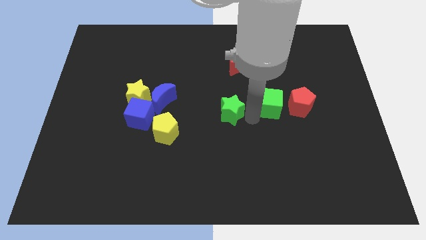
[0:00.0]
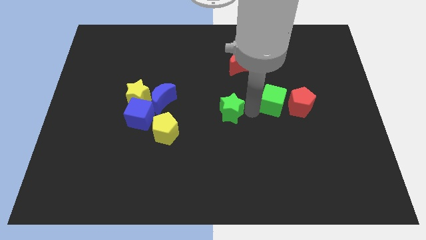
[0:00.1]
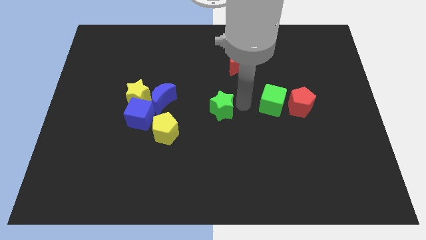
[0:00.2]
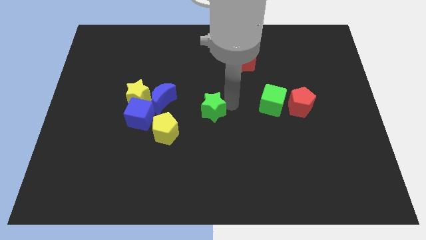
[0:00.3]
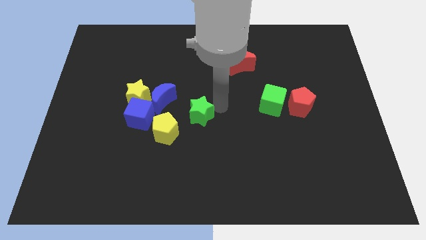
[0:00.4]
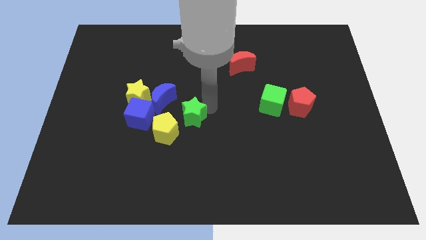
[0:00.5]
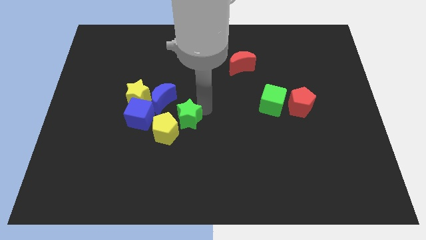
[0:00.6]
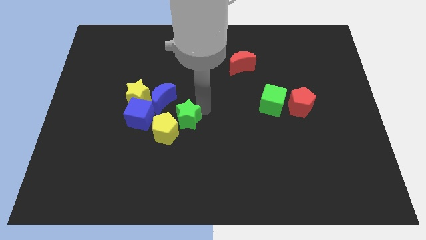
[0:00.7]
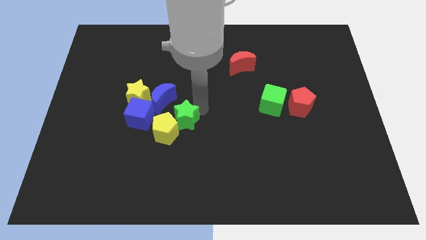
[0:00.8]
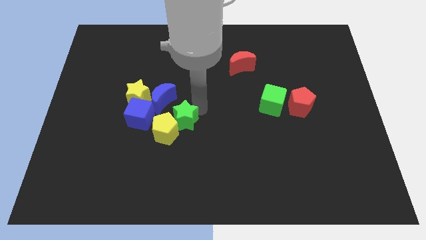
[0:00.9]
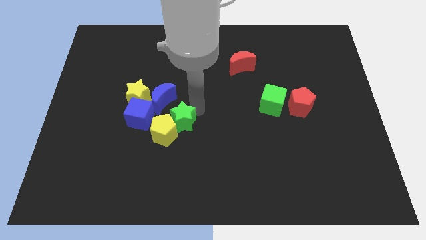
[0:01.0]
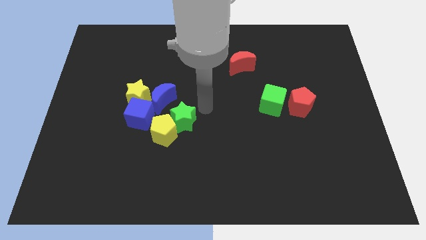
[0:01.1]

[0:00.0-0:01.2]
place green star to the top of yellow pentagon

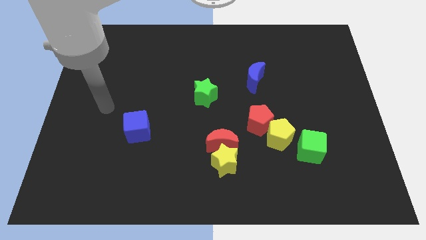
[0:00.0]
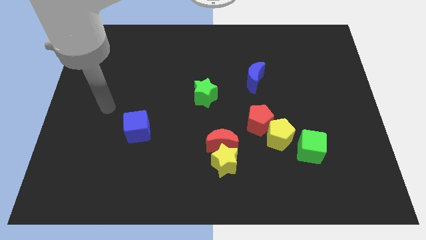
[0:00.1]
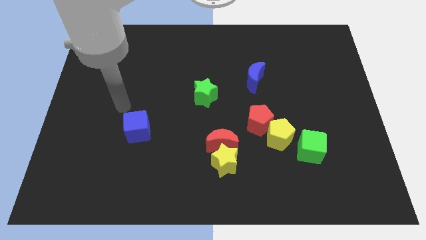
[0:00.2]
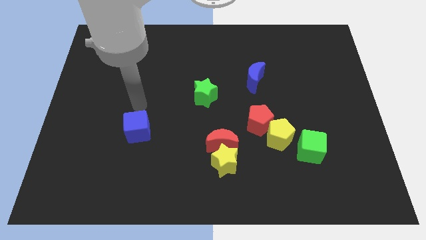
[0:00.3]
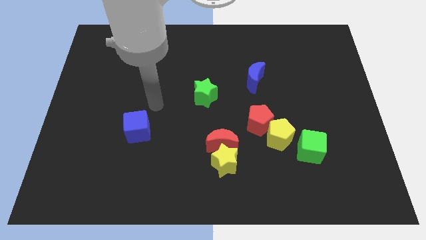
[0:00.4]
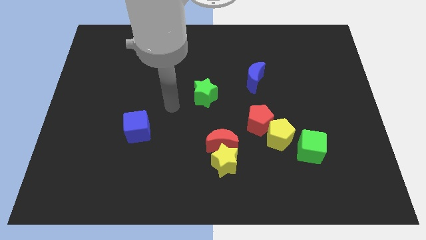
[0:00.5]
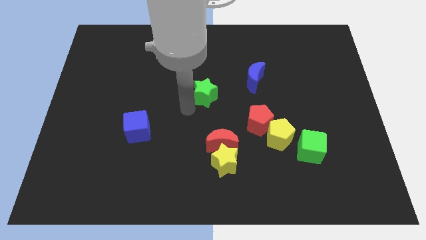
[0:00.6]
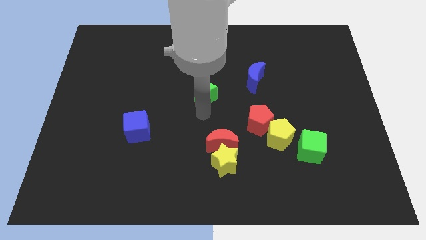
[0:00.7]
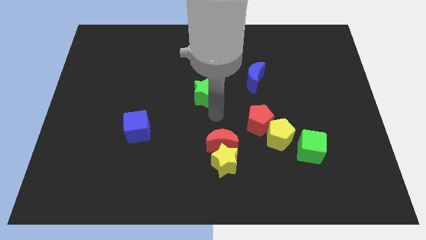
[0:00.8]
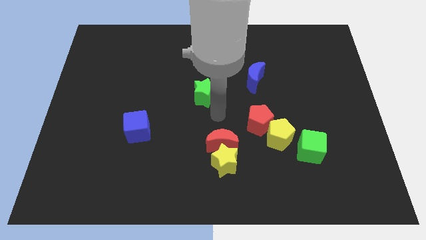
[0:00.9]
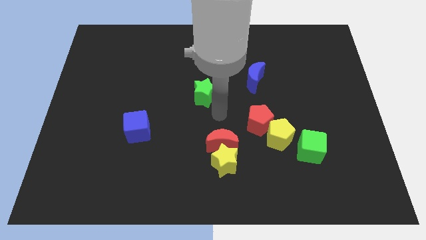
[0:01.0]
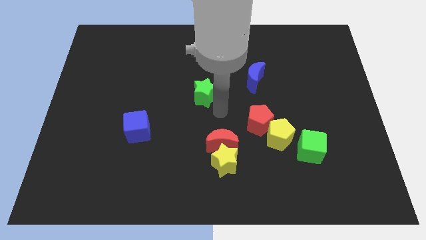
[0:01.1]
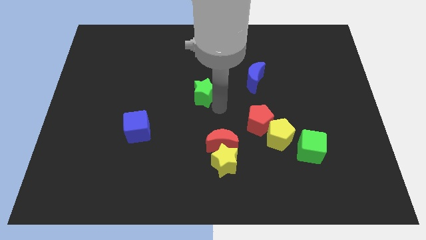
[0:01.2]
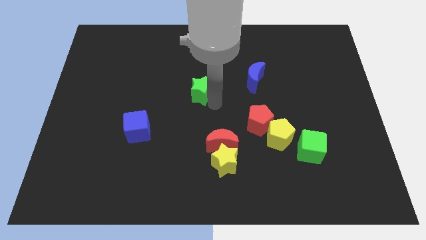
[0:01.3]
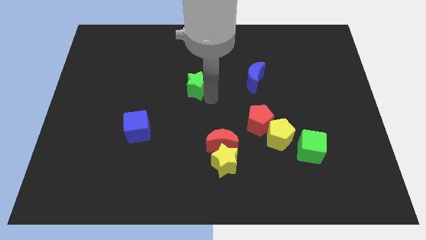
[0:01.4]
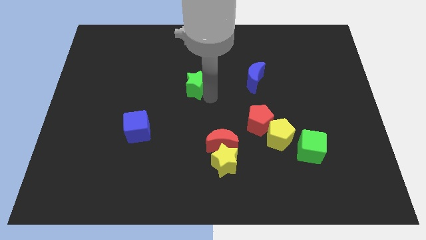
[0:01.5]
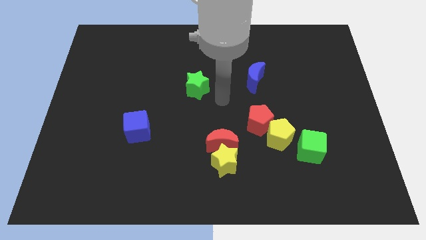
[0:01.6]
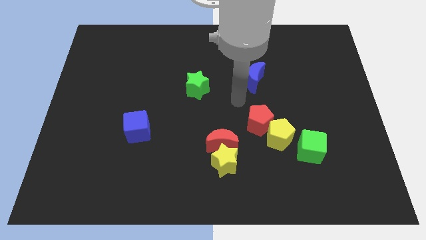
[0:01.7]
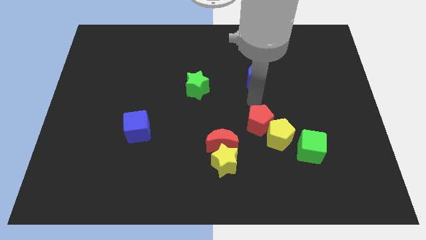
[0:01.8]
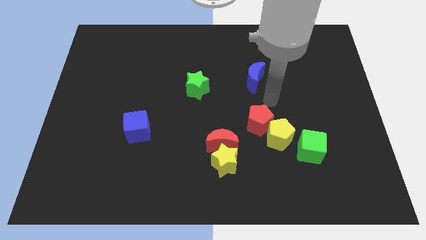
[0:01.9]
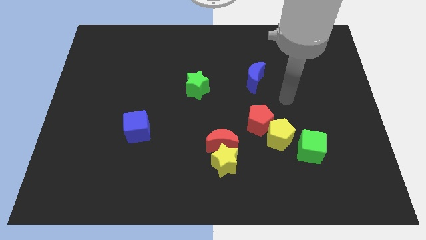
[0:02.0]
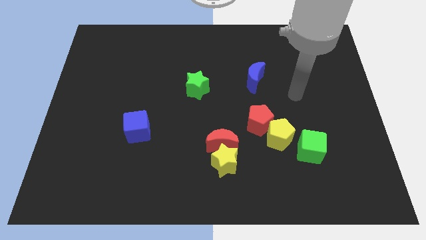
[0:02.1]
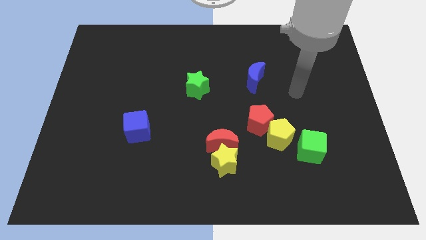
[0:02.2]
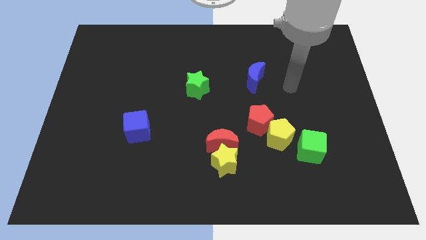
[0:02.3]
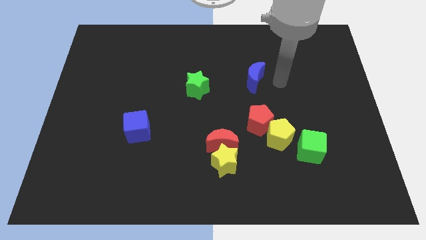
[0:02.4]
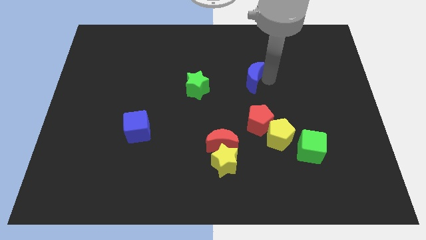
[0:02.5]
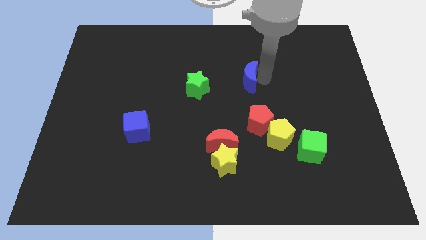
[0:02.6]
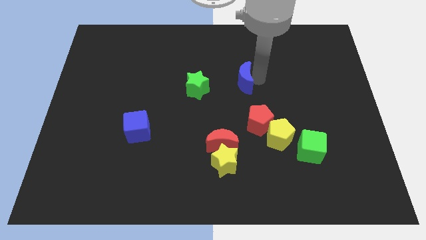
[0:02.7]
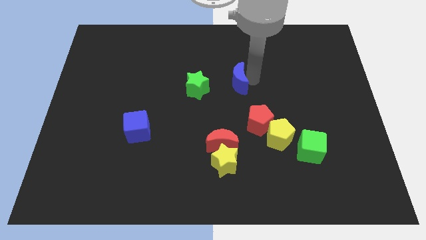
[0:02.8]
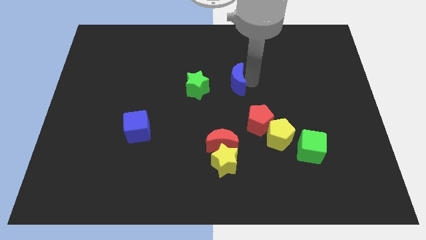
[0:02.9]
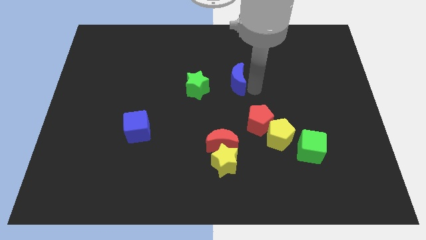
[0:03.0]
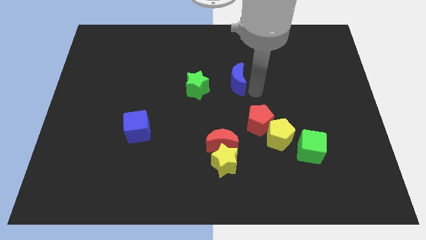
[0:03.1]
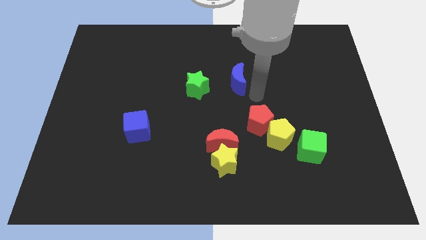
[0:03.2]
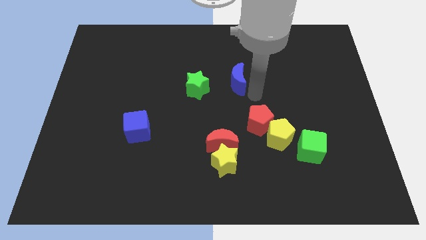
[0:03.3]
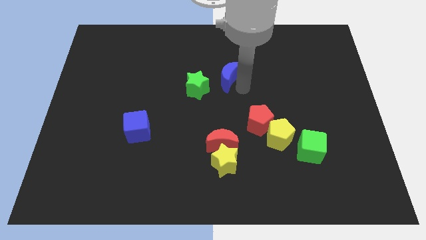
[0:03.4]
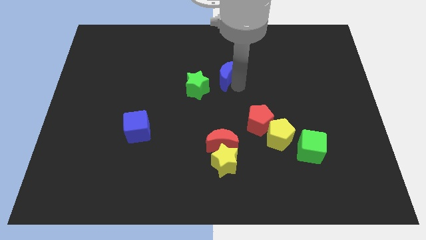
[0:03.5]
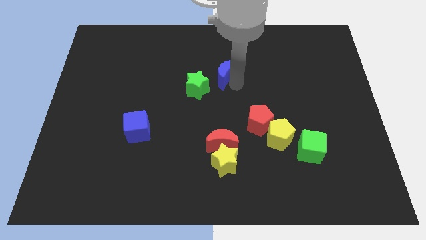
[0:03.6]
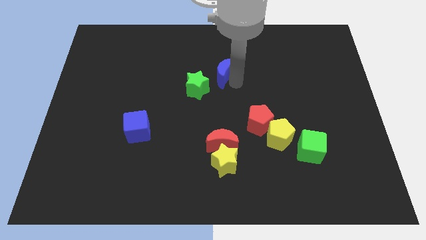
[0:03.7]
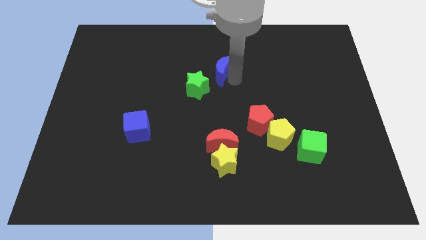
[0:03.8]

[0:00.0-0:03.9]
push the green star and blue moon diagonally at the top right side of the blue cube

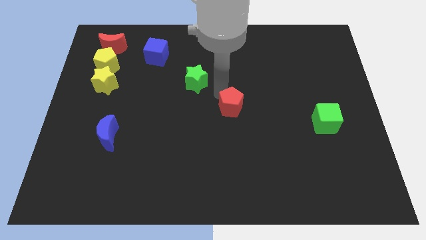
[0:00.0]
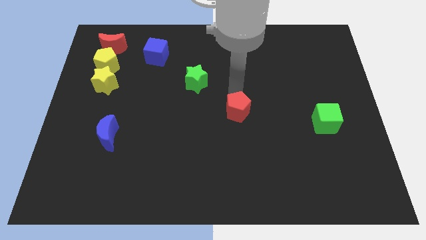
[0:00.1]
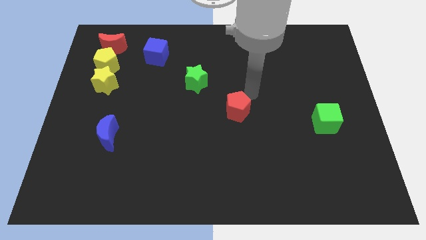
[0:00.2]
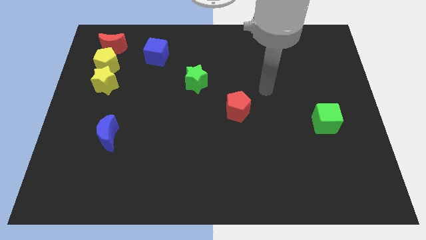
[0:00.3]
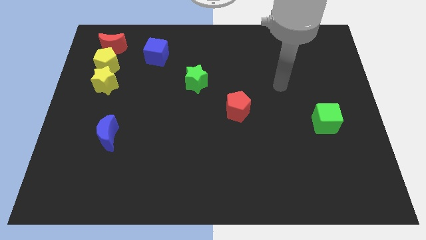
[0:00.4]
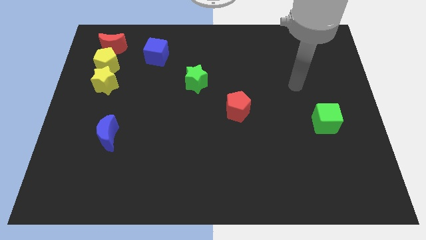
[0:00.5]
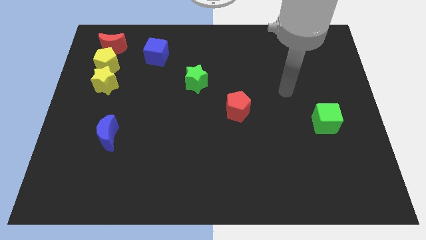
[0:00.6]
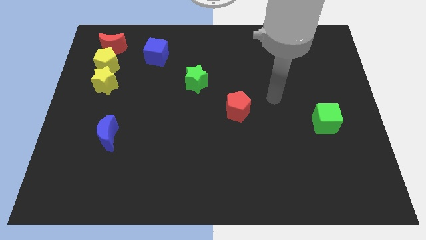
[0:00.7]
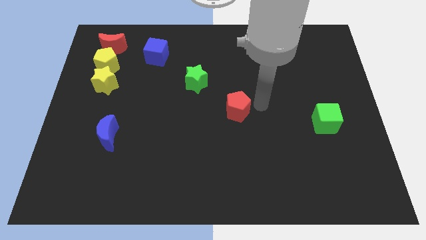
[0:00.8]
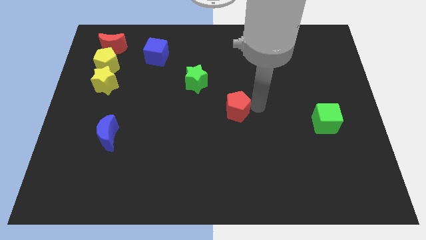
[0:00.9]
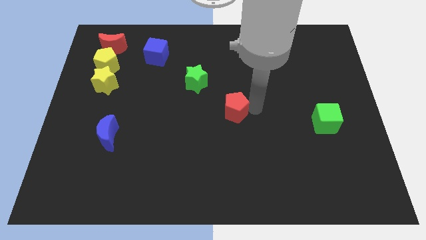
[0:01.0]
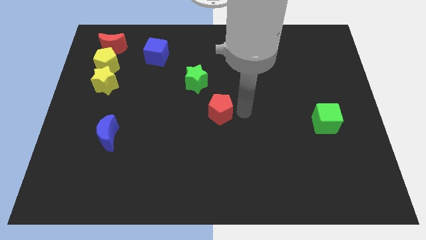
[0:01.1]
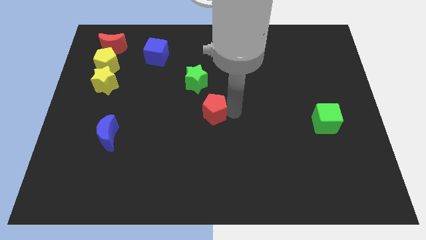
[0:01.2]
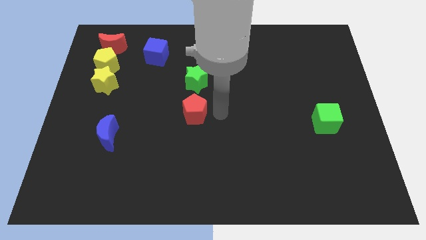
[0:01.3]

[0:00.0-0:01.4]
push the red pentagon to the center

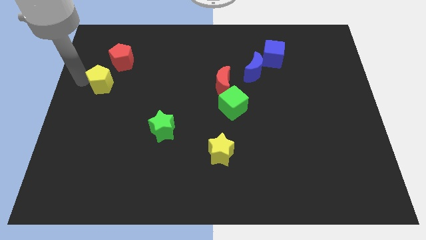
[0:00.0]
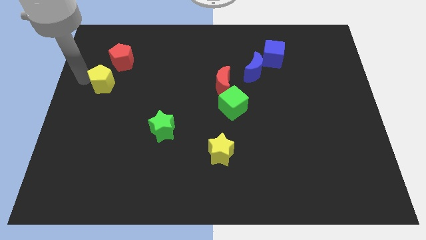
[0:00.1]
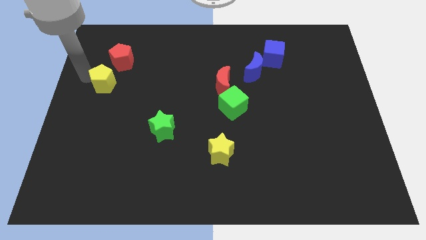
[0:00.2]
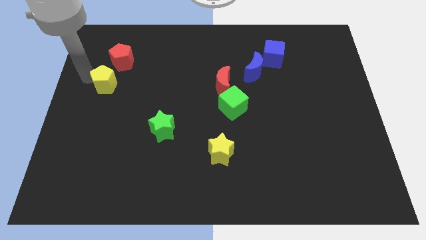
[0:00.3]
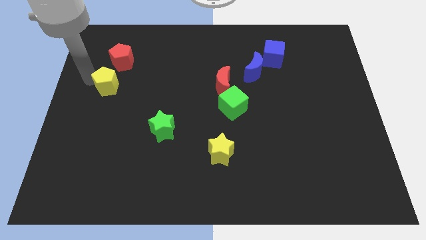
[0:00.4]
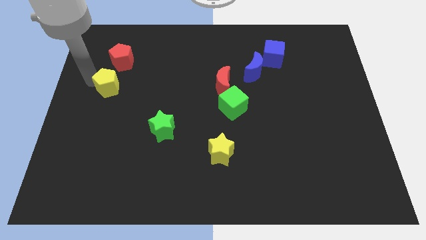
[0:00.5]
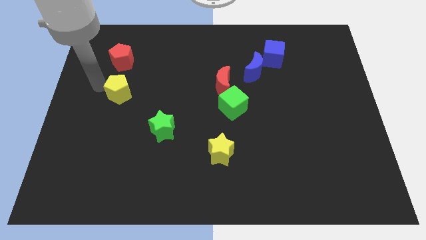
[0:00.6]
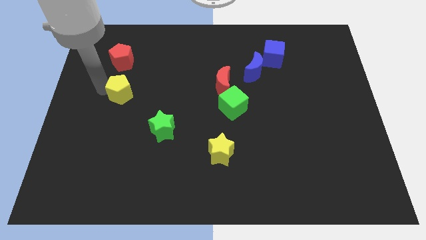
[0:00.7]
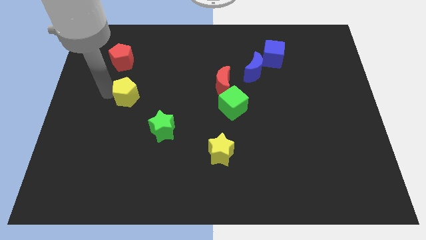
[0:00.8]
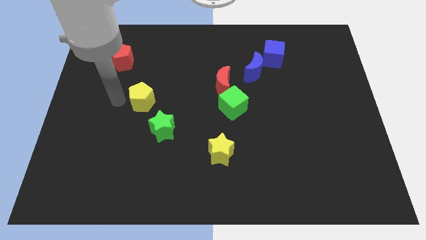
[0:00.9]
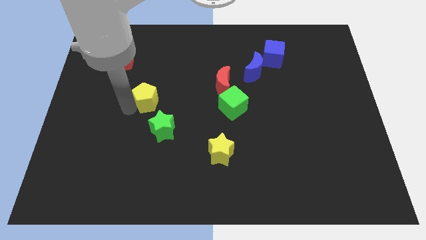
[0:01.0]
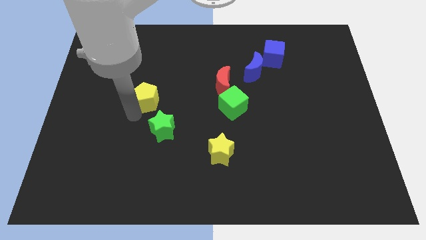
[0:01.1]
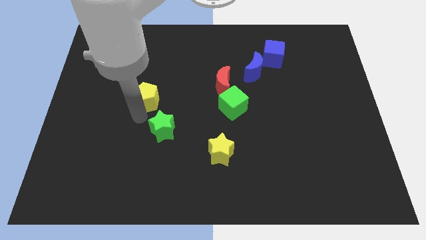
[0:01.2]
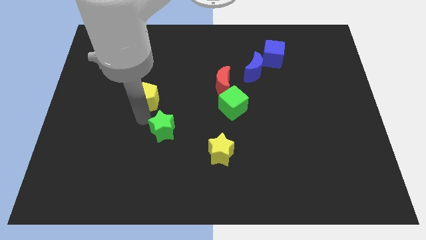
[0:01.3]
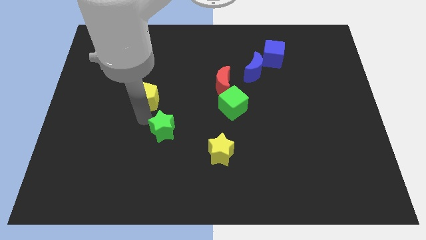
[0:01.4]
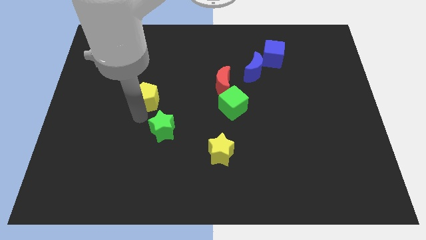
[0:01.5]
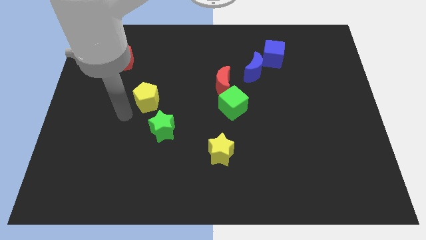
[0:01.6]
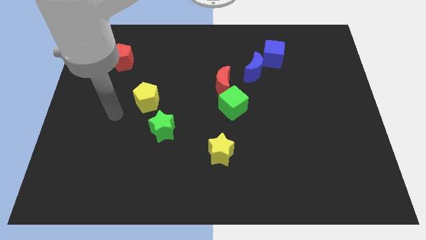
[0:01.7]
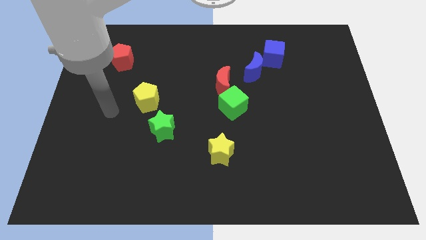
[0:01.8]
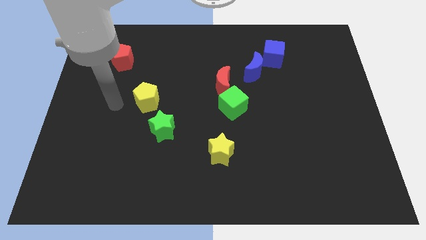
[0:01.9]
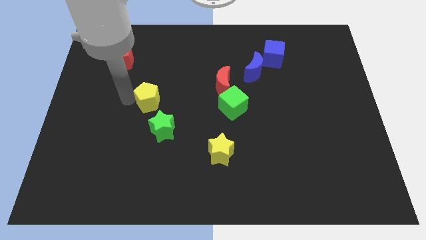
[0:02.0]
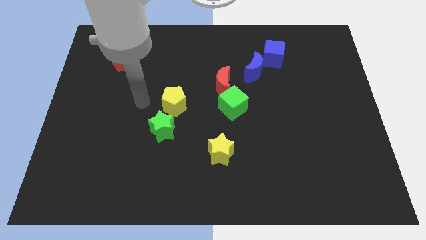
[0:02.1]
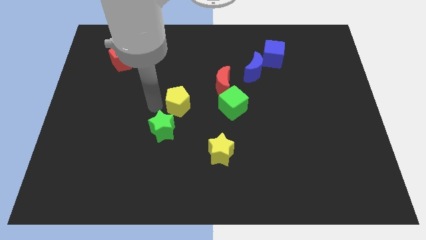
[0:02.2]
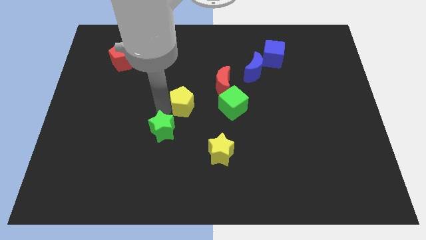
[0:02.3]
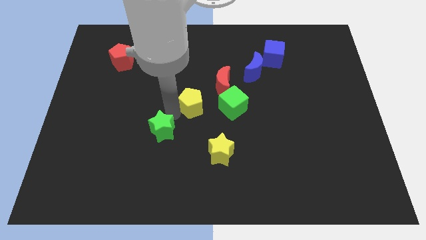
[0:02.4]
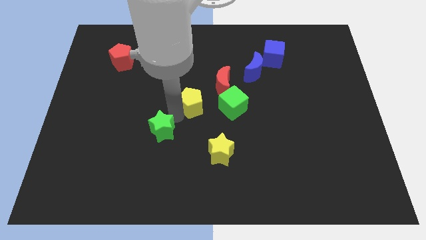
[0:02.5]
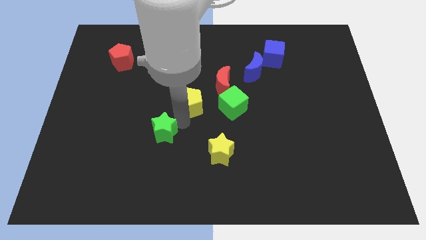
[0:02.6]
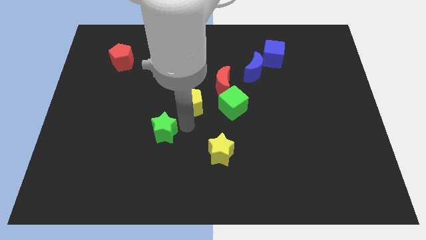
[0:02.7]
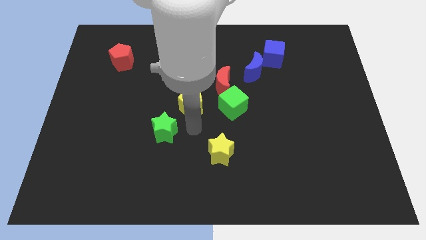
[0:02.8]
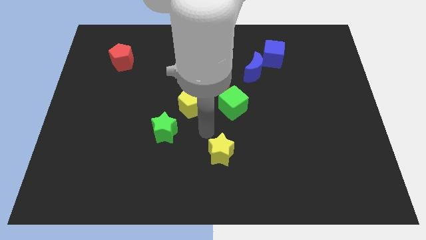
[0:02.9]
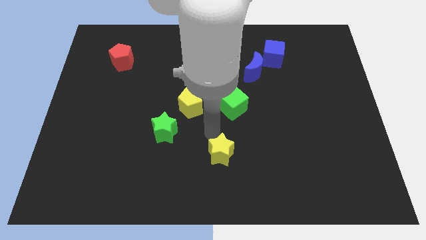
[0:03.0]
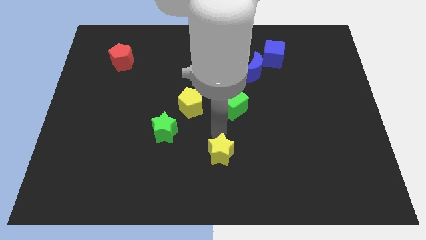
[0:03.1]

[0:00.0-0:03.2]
place yellow pentagon to the center of the board
